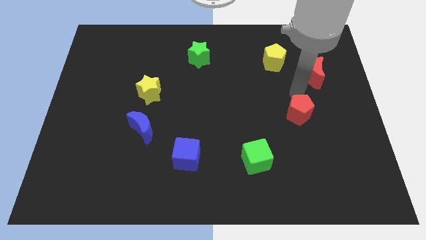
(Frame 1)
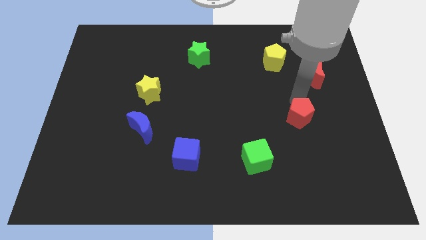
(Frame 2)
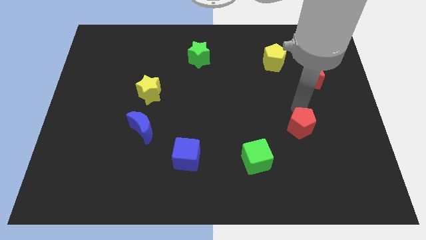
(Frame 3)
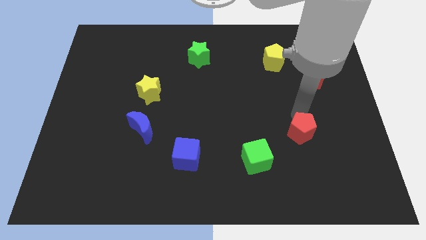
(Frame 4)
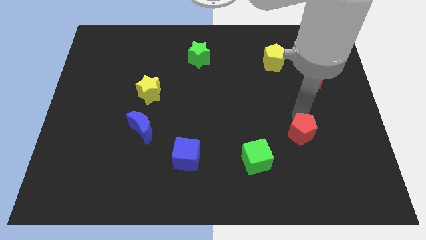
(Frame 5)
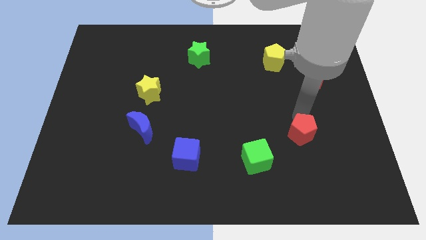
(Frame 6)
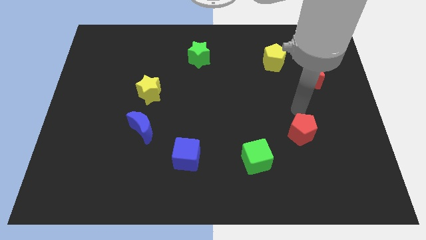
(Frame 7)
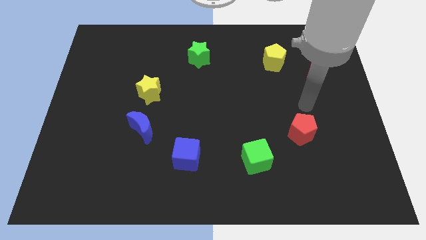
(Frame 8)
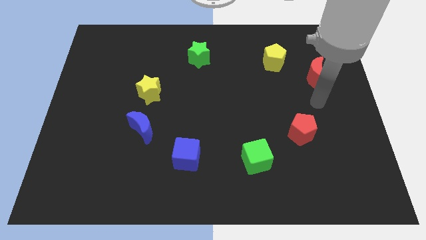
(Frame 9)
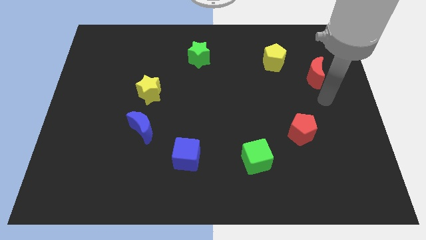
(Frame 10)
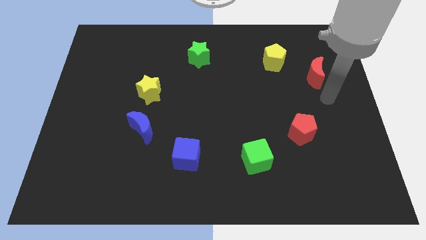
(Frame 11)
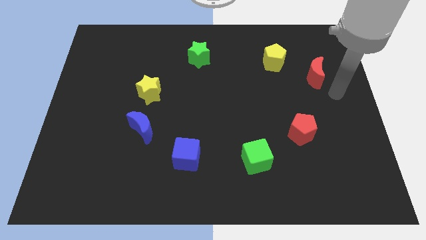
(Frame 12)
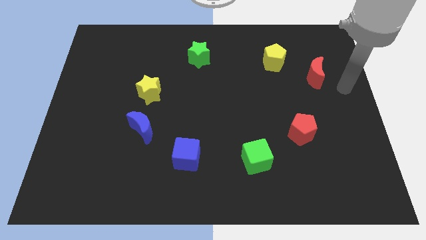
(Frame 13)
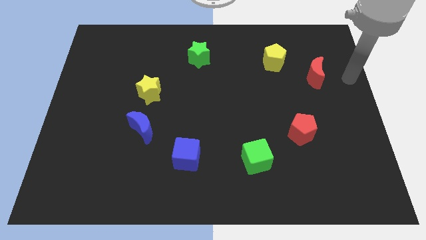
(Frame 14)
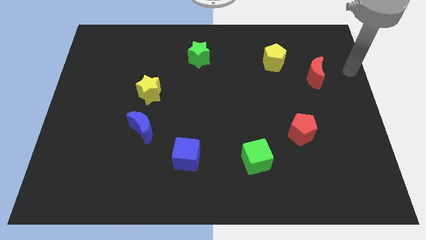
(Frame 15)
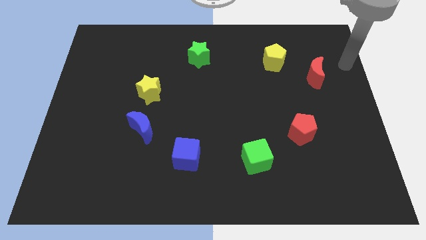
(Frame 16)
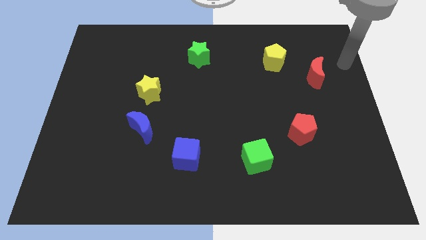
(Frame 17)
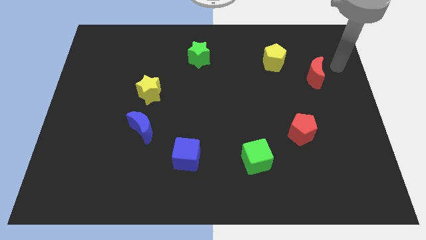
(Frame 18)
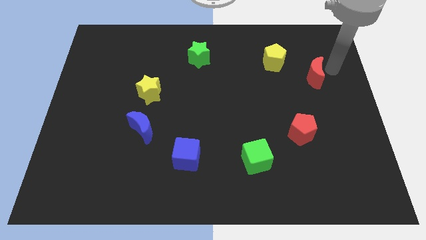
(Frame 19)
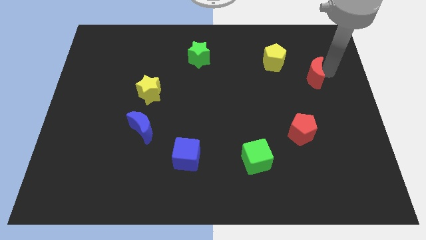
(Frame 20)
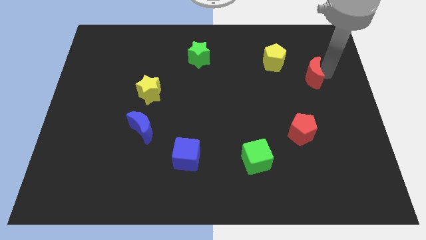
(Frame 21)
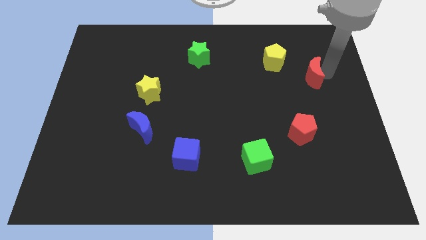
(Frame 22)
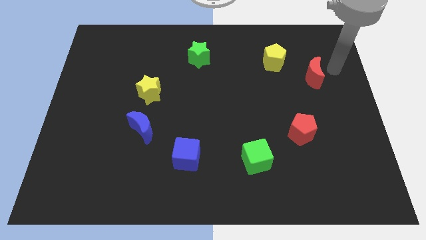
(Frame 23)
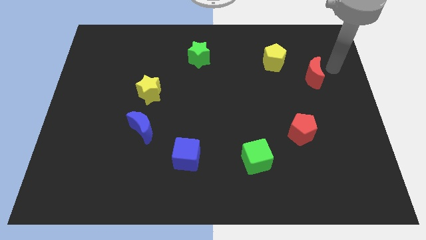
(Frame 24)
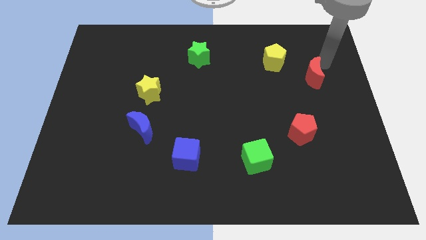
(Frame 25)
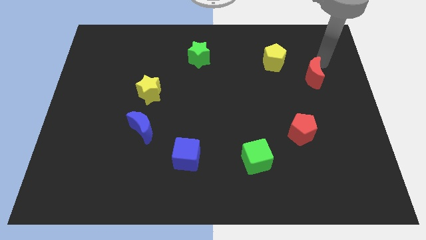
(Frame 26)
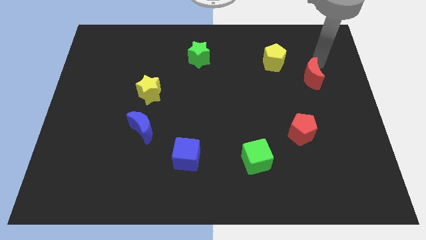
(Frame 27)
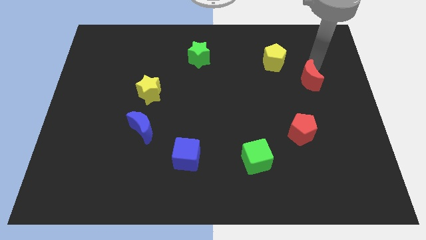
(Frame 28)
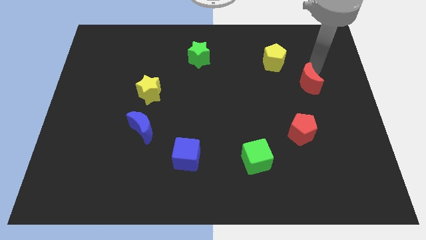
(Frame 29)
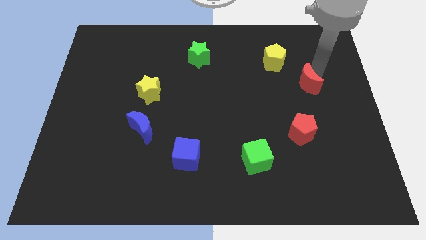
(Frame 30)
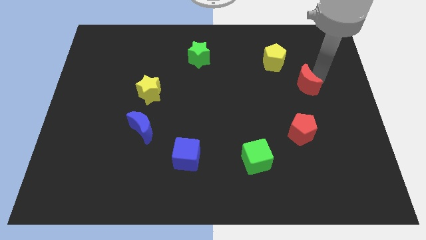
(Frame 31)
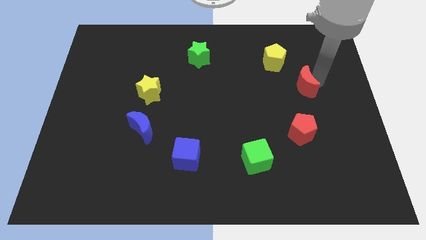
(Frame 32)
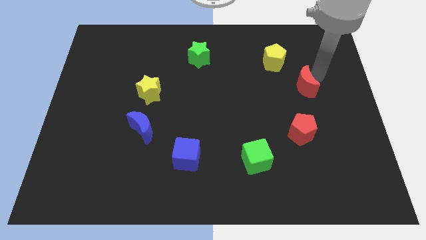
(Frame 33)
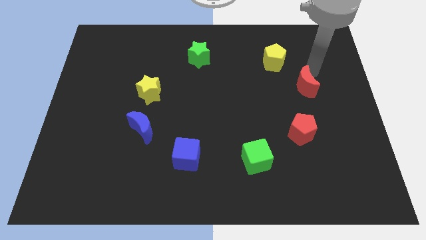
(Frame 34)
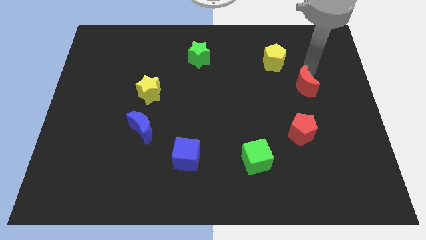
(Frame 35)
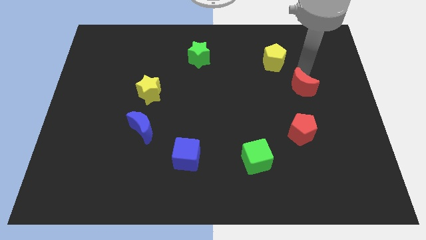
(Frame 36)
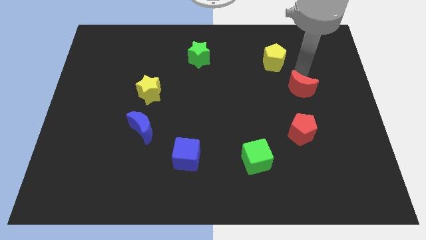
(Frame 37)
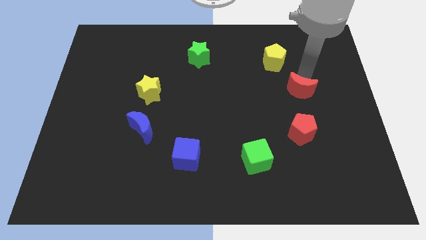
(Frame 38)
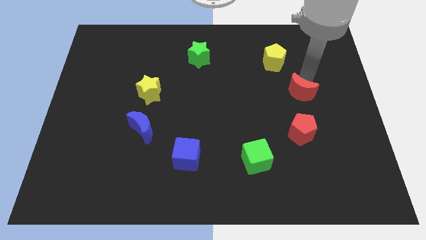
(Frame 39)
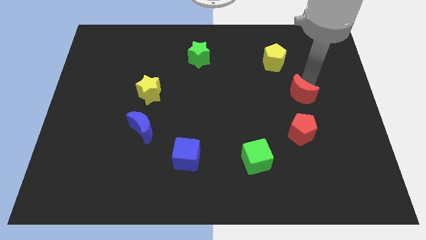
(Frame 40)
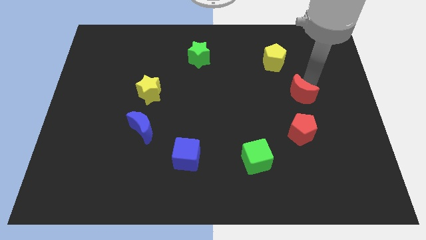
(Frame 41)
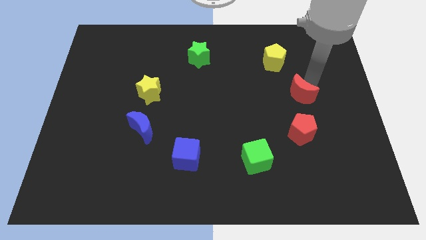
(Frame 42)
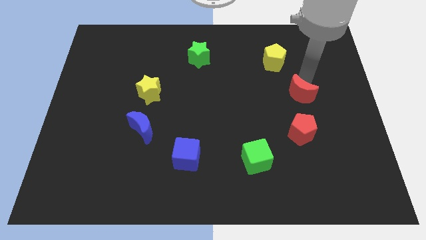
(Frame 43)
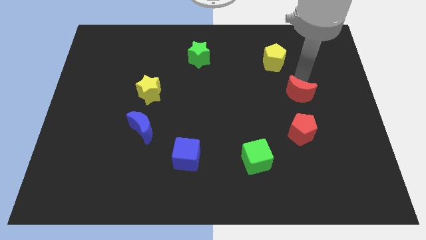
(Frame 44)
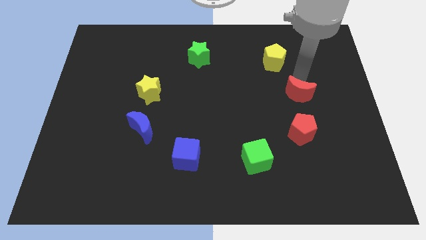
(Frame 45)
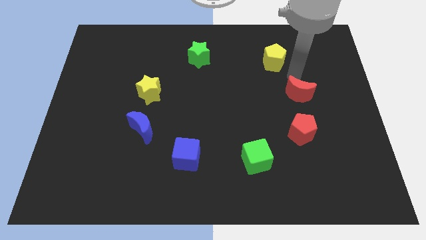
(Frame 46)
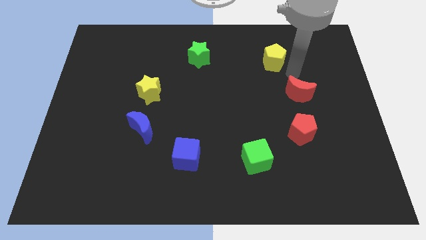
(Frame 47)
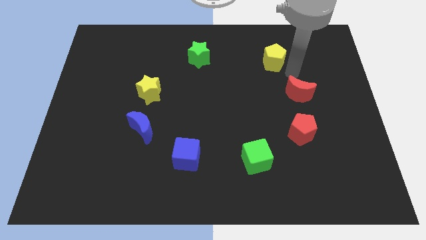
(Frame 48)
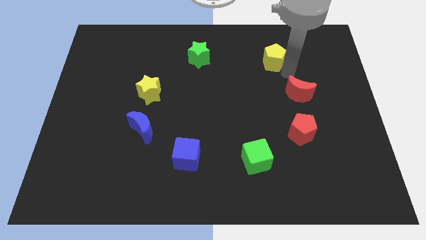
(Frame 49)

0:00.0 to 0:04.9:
put the red crescent and red pentagon in a line vertically

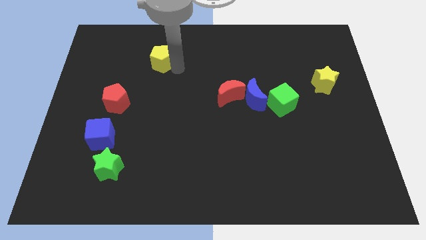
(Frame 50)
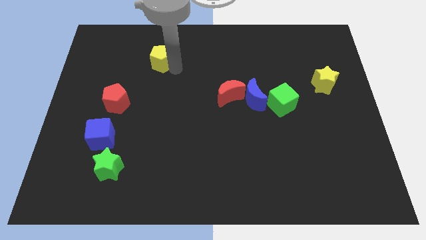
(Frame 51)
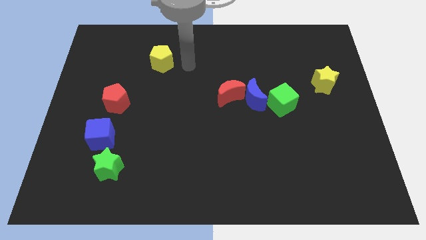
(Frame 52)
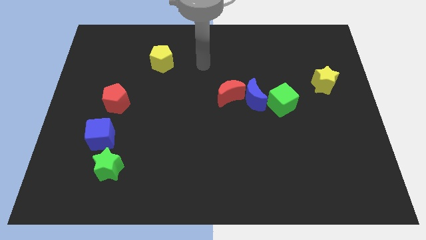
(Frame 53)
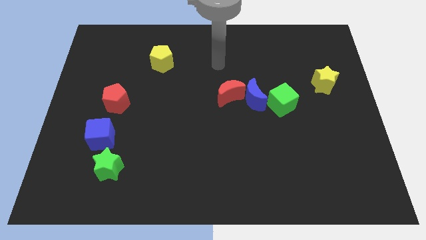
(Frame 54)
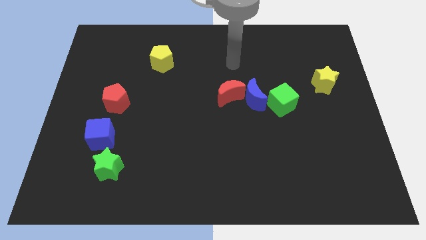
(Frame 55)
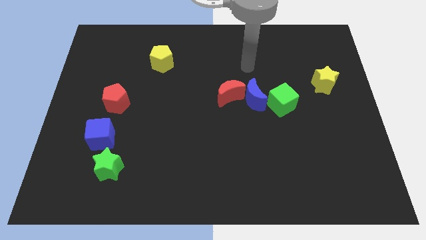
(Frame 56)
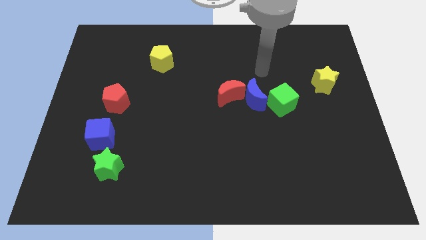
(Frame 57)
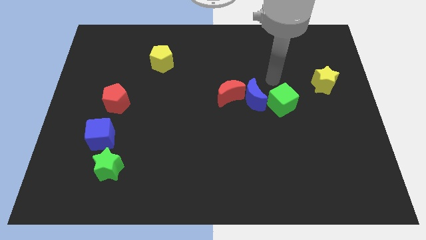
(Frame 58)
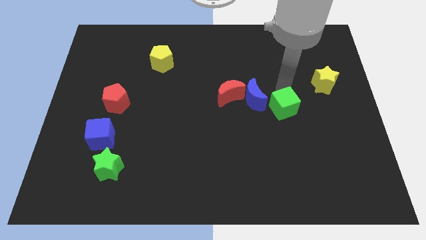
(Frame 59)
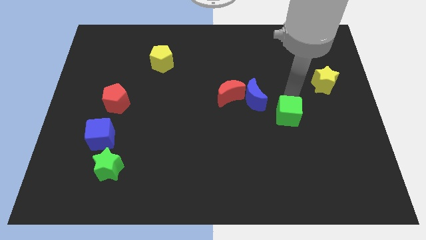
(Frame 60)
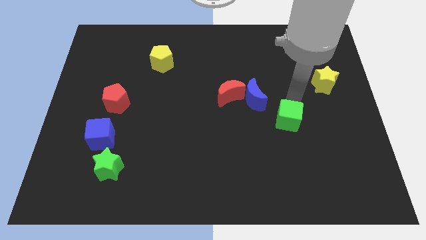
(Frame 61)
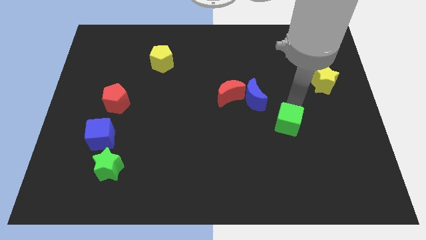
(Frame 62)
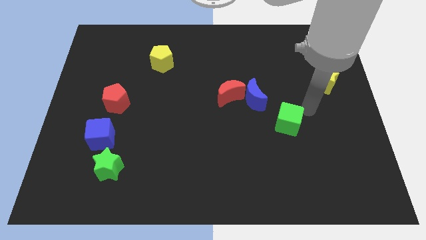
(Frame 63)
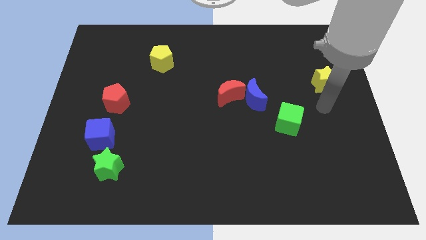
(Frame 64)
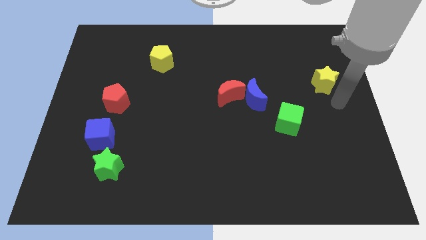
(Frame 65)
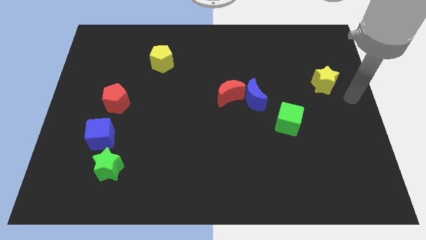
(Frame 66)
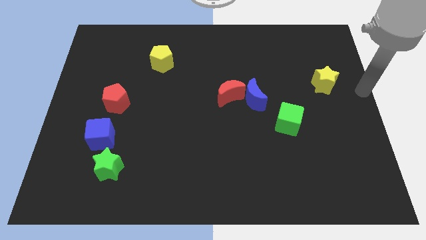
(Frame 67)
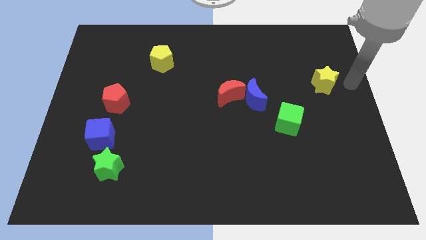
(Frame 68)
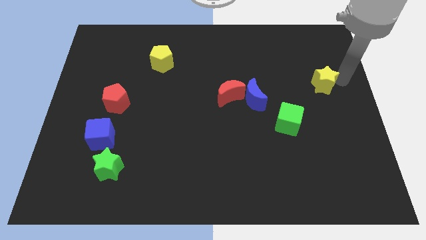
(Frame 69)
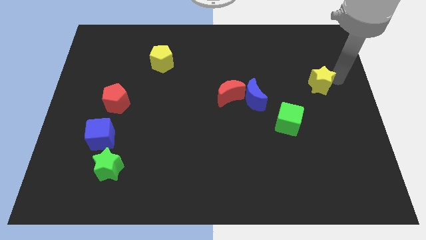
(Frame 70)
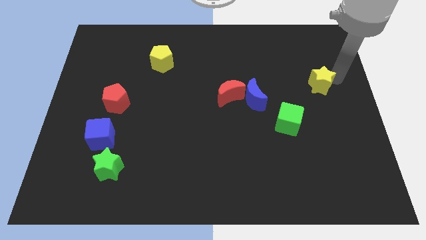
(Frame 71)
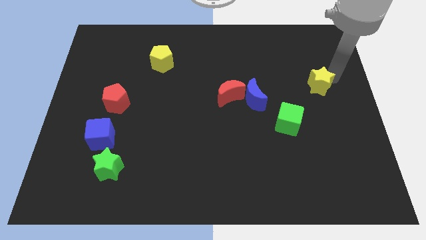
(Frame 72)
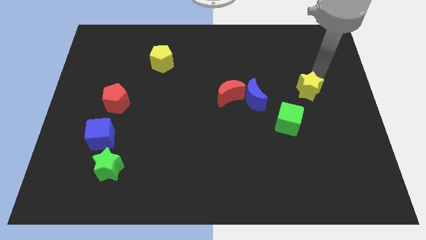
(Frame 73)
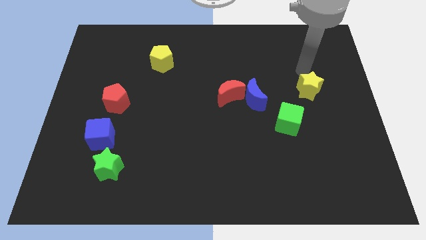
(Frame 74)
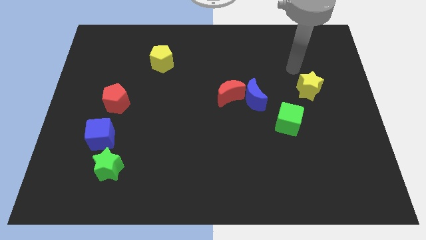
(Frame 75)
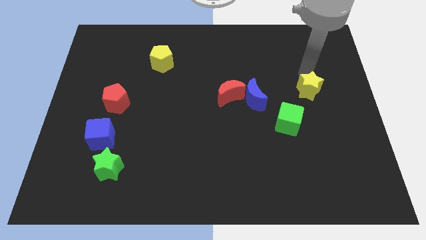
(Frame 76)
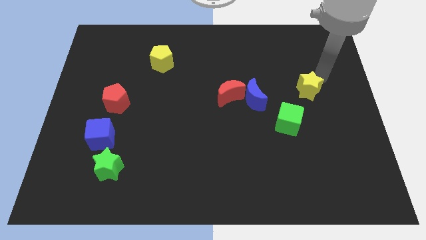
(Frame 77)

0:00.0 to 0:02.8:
slightly move down the green cube

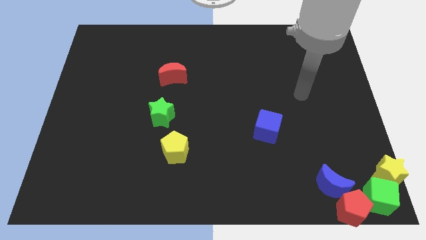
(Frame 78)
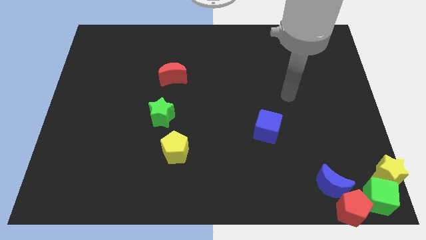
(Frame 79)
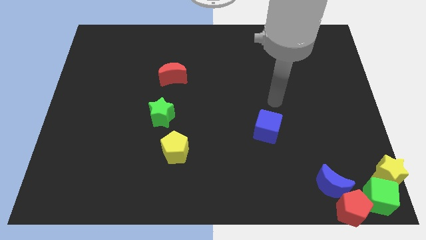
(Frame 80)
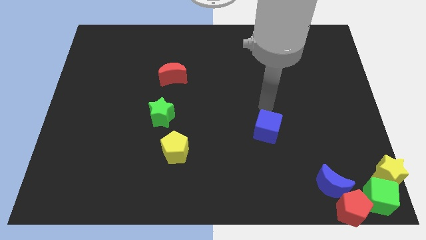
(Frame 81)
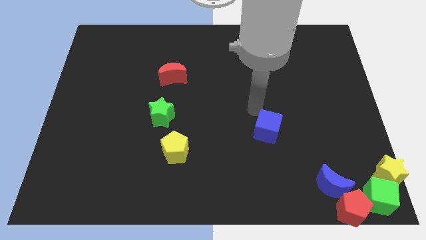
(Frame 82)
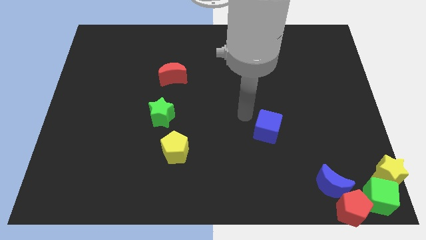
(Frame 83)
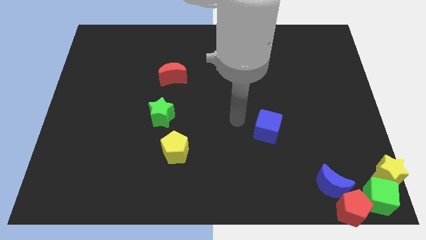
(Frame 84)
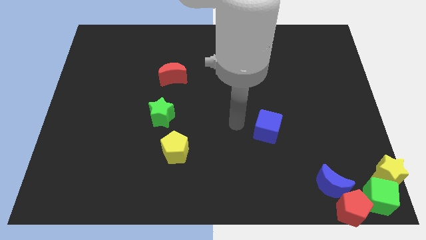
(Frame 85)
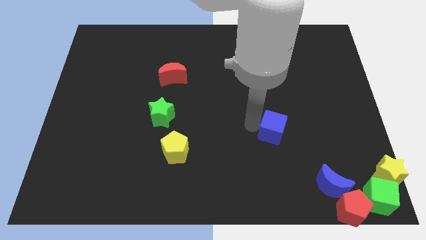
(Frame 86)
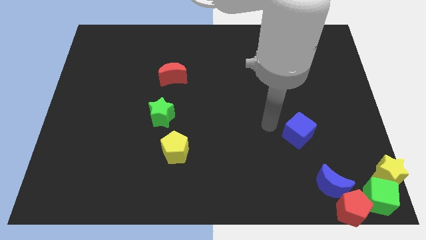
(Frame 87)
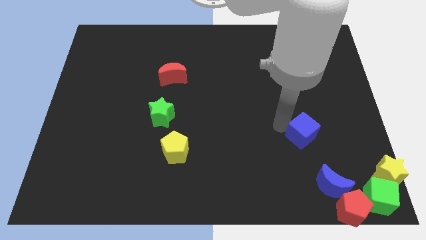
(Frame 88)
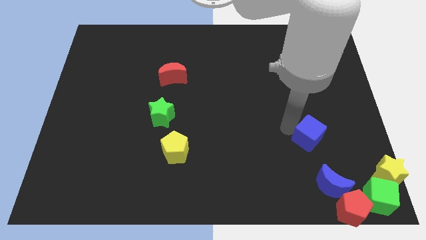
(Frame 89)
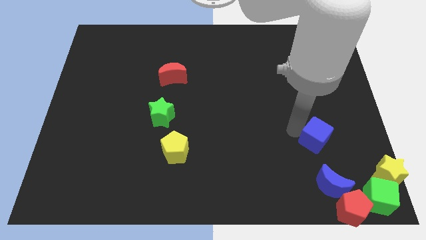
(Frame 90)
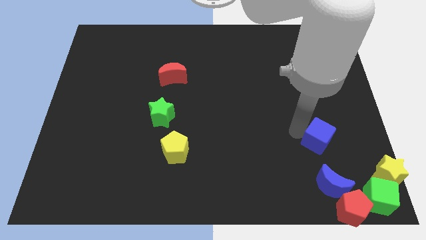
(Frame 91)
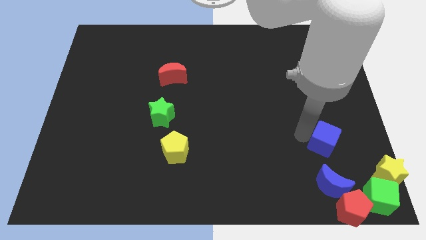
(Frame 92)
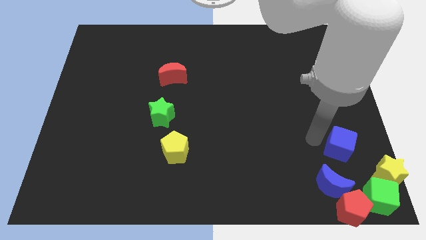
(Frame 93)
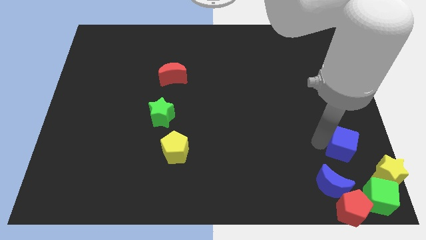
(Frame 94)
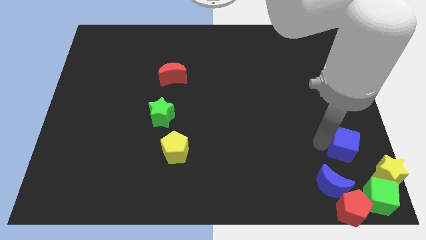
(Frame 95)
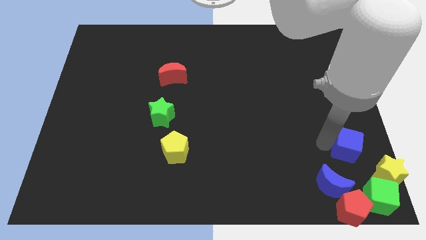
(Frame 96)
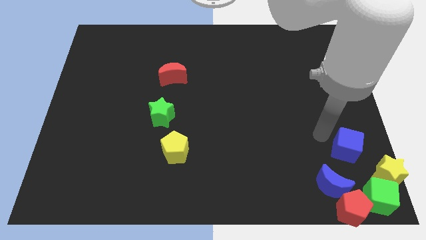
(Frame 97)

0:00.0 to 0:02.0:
push the blue cube close to the yellow star
